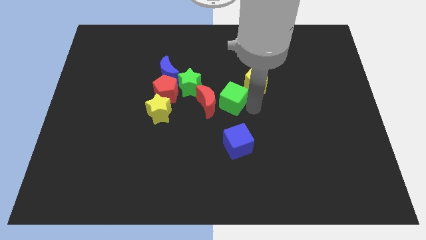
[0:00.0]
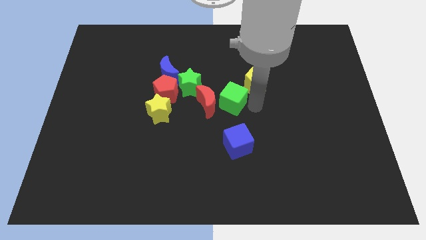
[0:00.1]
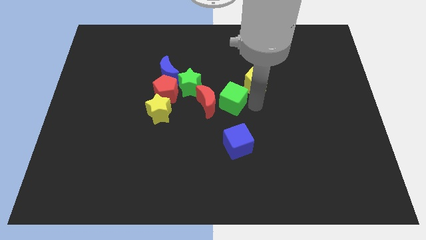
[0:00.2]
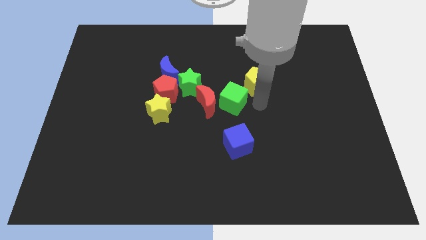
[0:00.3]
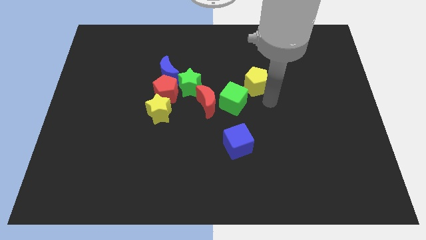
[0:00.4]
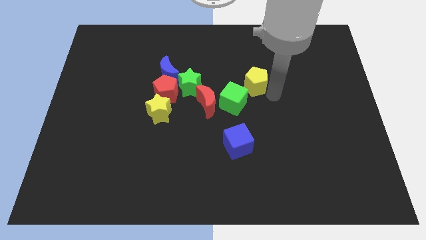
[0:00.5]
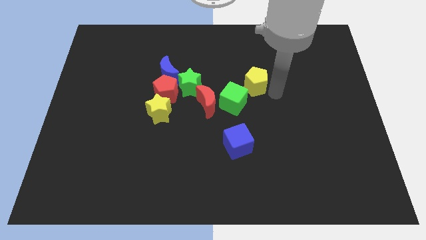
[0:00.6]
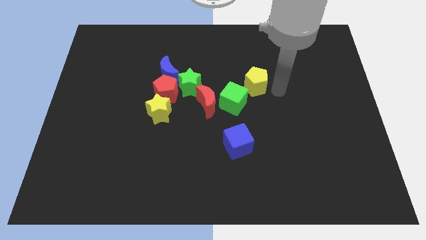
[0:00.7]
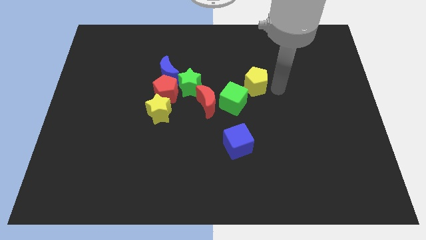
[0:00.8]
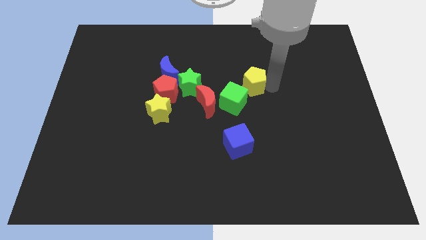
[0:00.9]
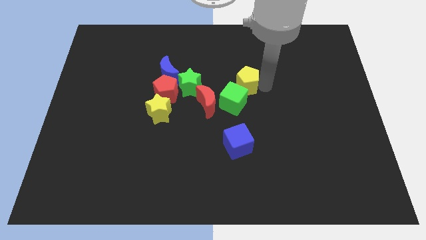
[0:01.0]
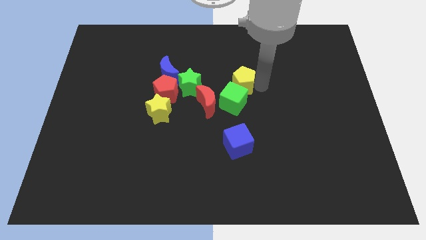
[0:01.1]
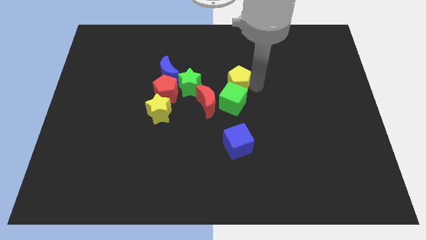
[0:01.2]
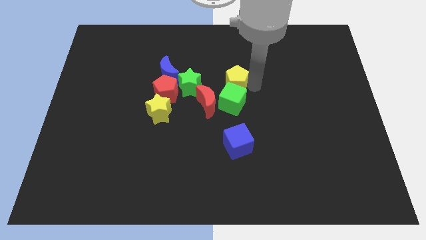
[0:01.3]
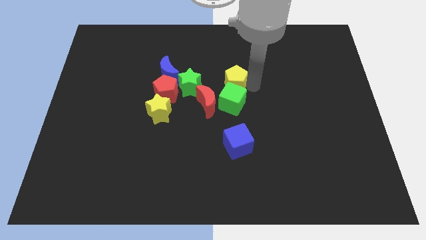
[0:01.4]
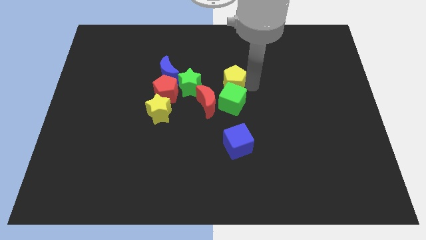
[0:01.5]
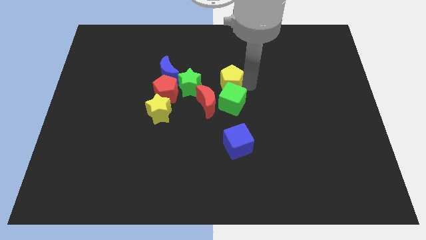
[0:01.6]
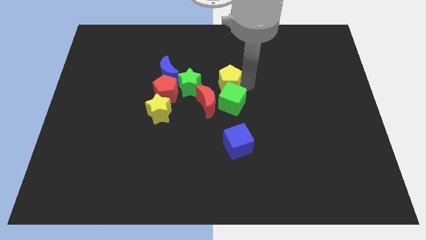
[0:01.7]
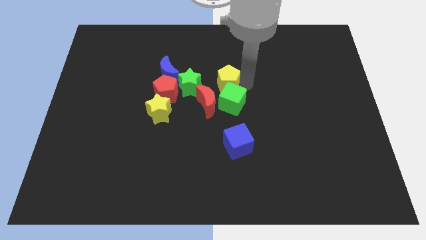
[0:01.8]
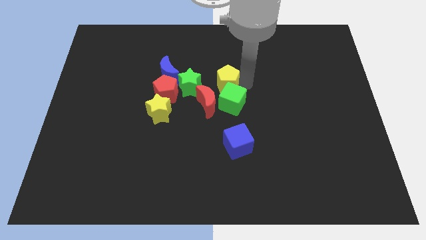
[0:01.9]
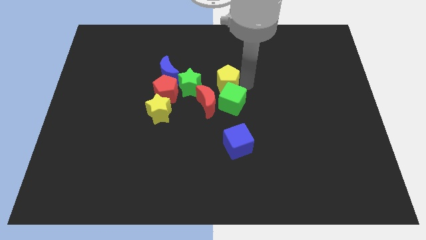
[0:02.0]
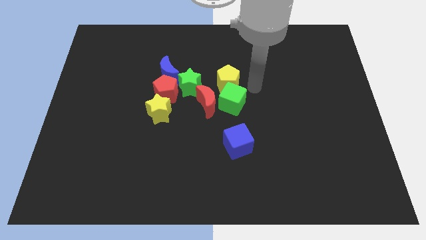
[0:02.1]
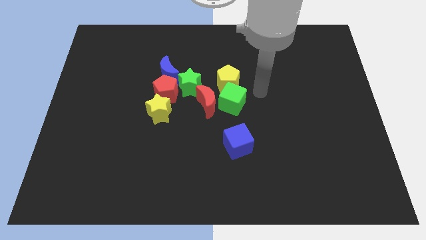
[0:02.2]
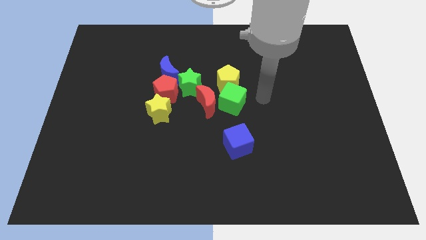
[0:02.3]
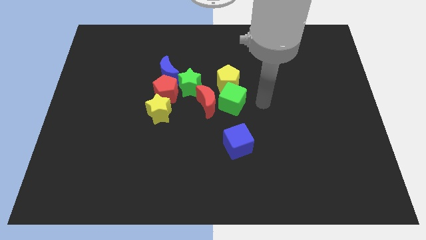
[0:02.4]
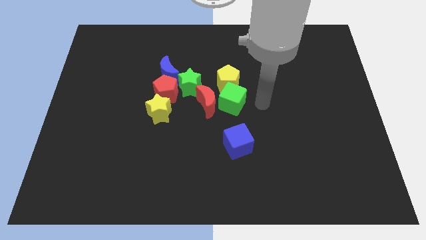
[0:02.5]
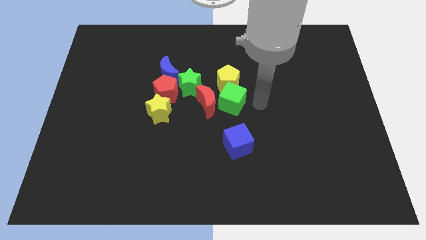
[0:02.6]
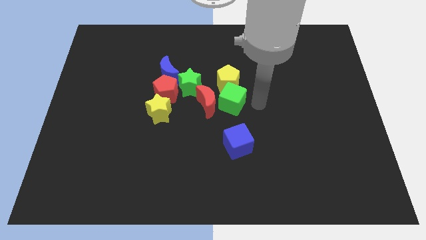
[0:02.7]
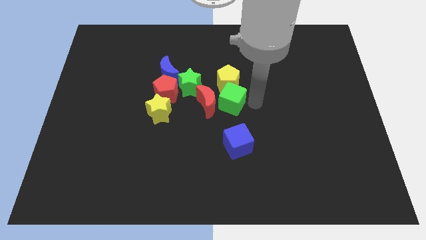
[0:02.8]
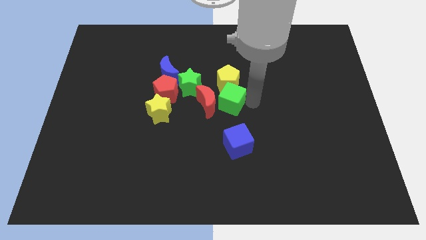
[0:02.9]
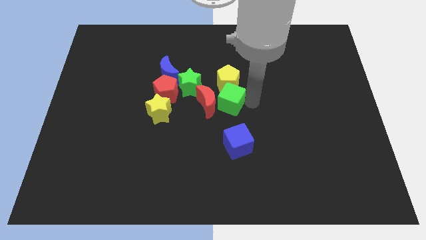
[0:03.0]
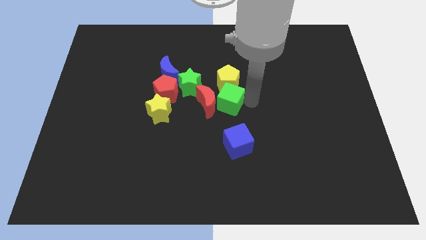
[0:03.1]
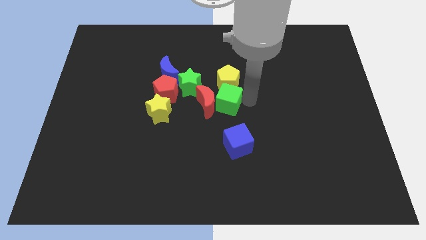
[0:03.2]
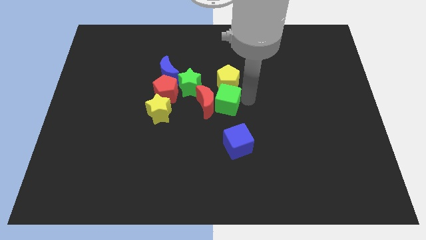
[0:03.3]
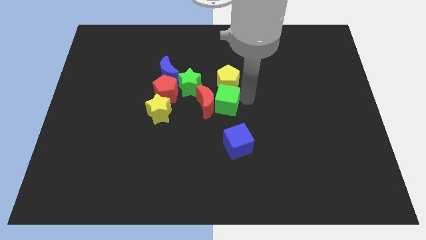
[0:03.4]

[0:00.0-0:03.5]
move the yellow pentagon to the top of the green cube

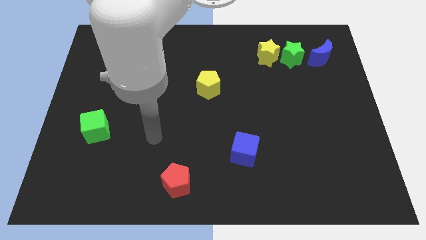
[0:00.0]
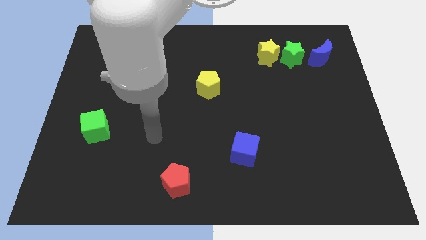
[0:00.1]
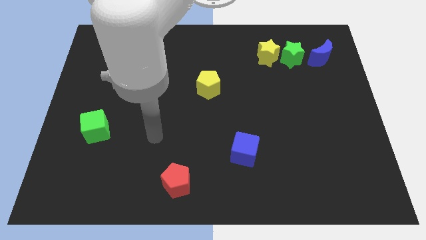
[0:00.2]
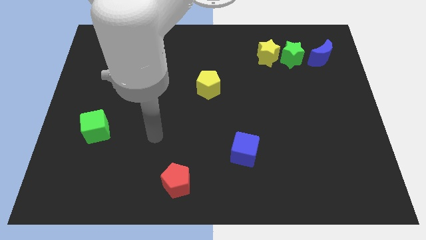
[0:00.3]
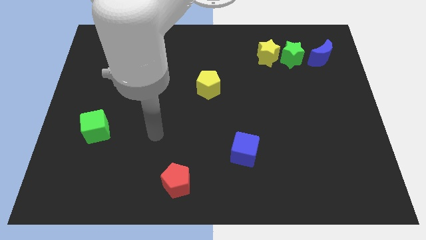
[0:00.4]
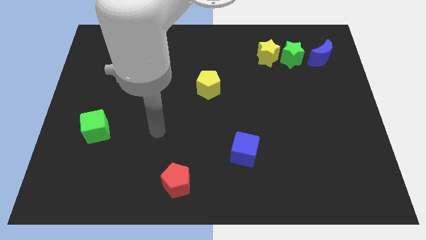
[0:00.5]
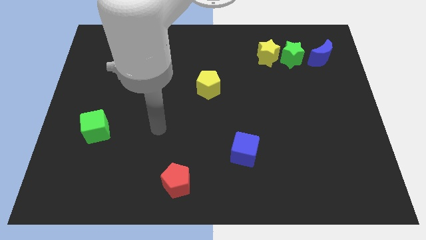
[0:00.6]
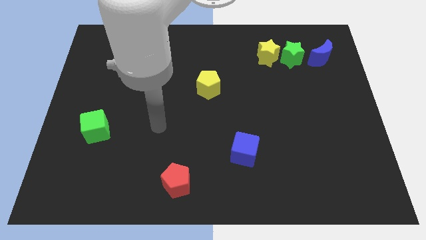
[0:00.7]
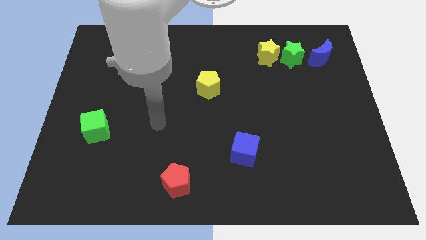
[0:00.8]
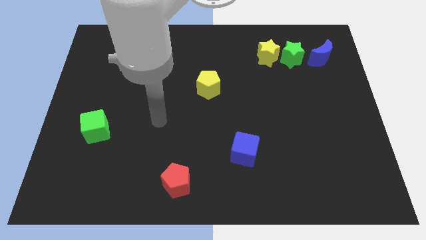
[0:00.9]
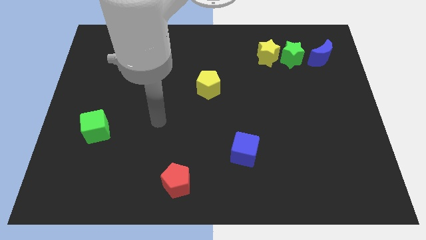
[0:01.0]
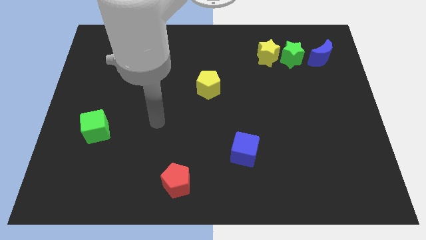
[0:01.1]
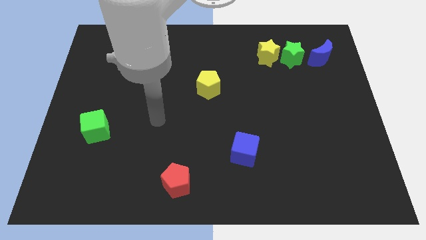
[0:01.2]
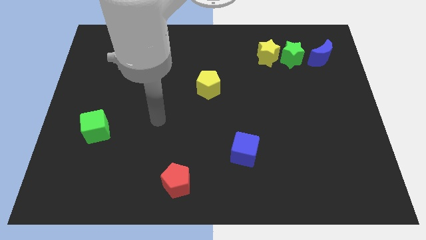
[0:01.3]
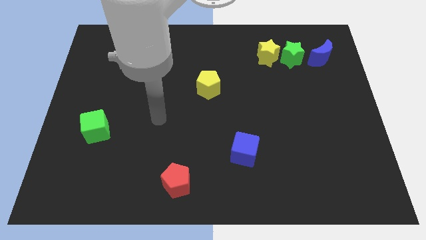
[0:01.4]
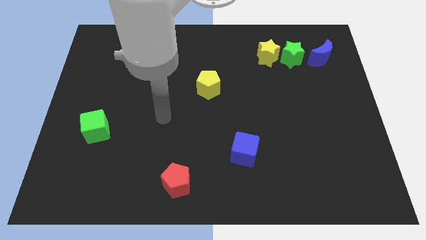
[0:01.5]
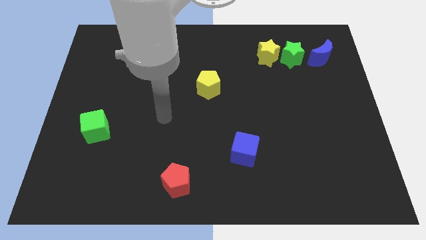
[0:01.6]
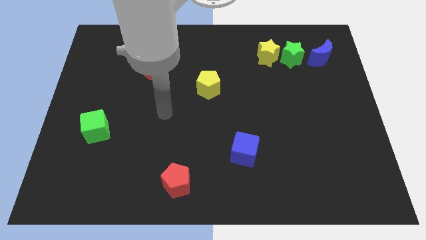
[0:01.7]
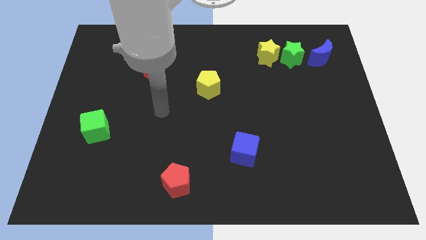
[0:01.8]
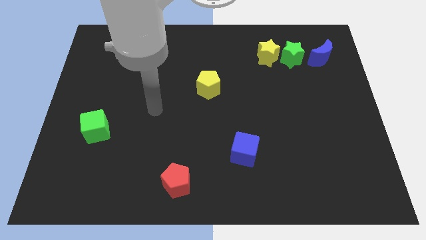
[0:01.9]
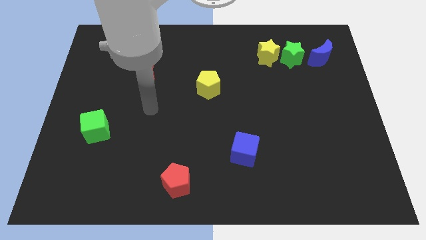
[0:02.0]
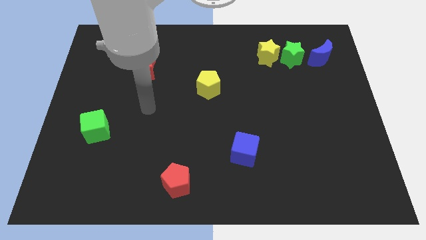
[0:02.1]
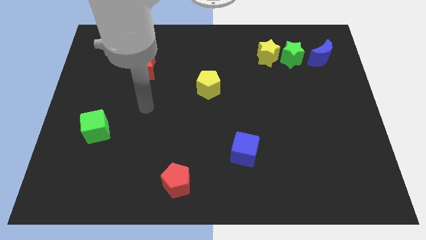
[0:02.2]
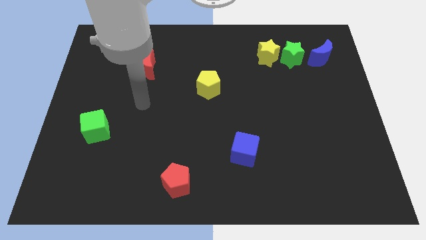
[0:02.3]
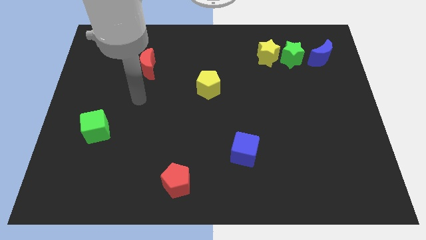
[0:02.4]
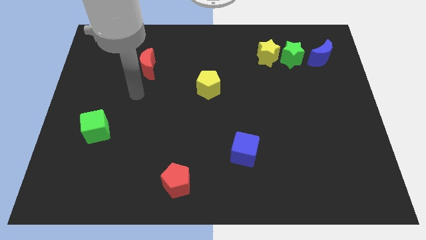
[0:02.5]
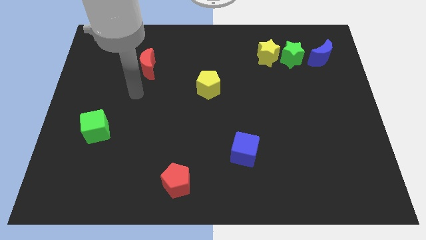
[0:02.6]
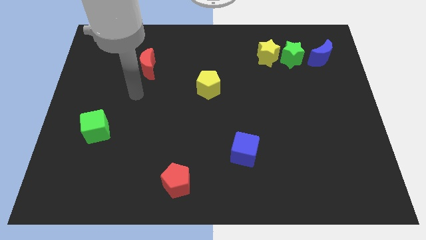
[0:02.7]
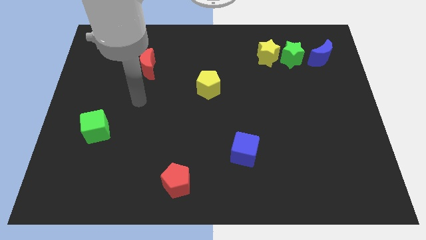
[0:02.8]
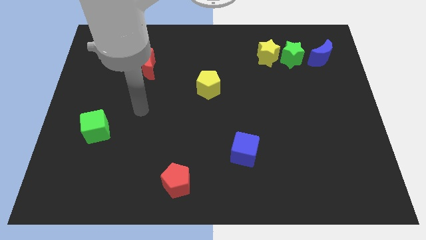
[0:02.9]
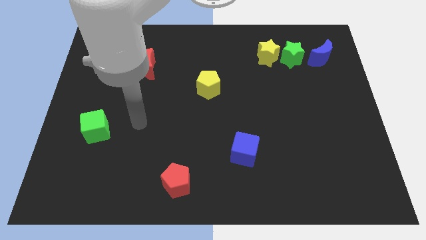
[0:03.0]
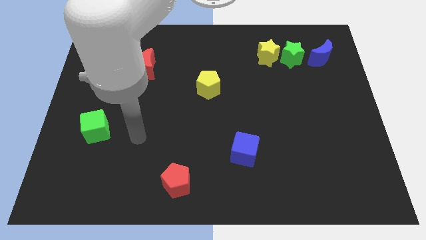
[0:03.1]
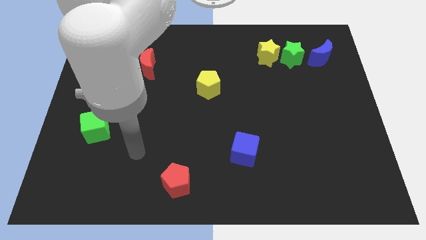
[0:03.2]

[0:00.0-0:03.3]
place your hand in between the green cube and red pentagon

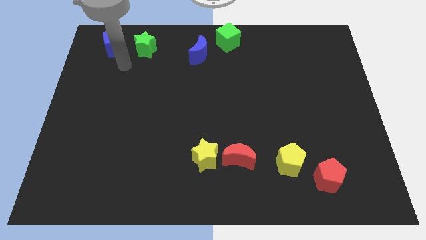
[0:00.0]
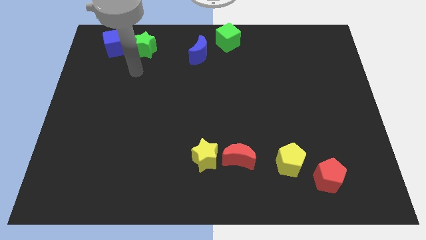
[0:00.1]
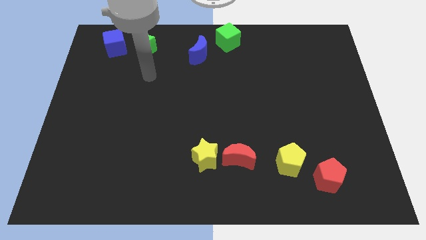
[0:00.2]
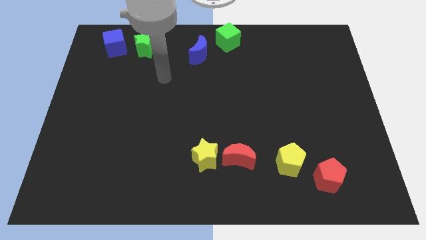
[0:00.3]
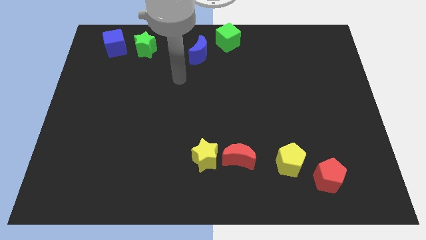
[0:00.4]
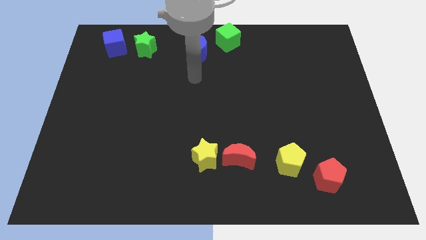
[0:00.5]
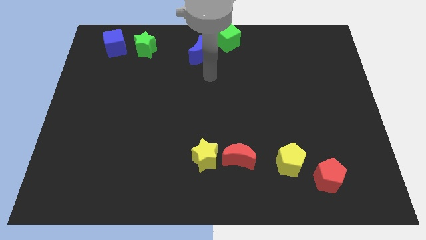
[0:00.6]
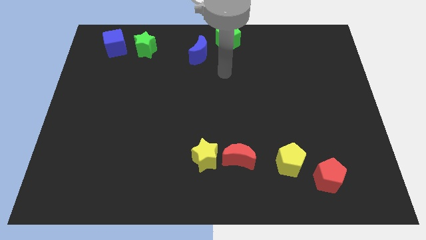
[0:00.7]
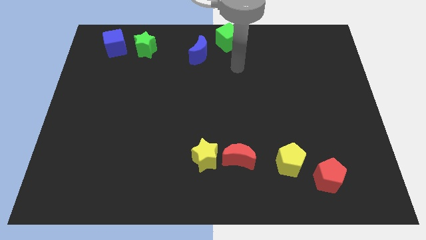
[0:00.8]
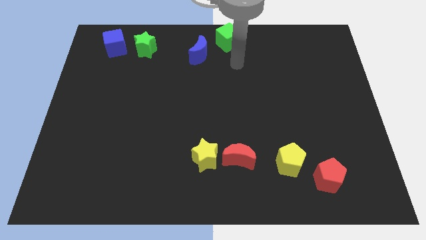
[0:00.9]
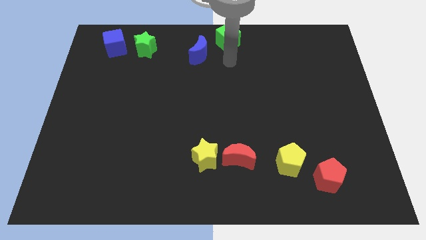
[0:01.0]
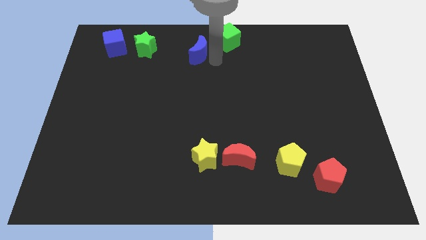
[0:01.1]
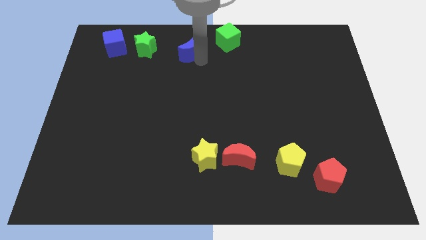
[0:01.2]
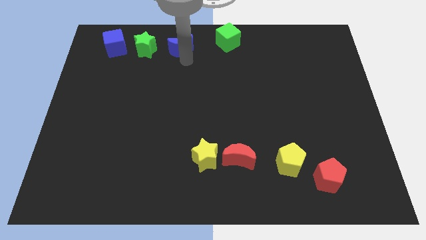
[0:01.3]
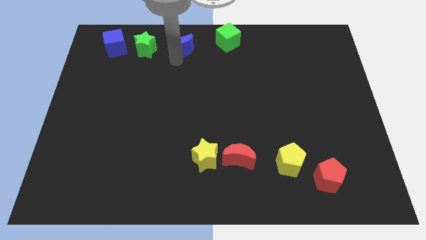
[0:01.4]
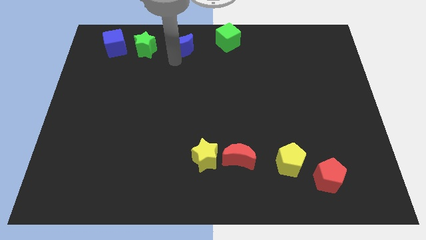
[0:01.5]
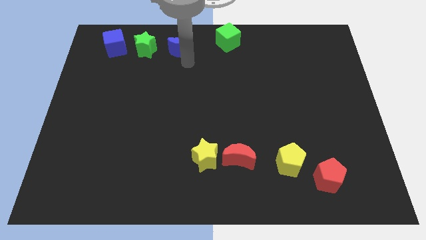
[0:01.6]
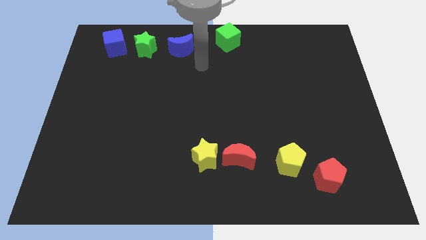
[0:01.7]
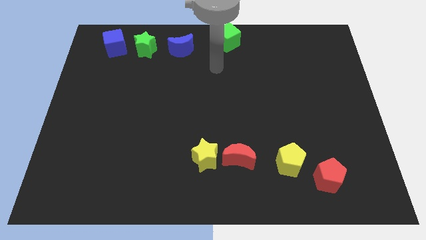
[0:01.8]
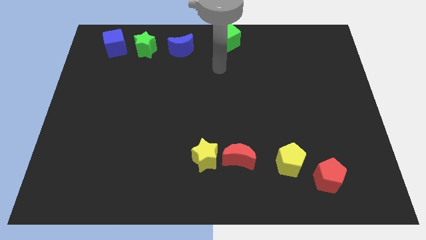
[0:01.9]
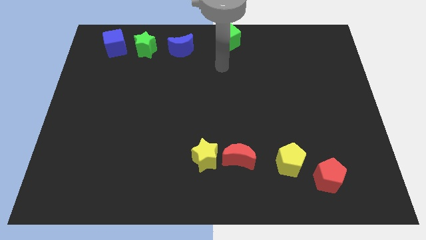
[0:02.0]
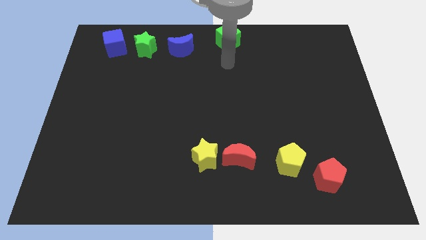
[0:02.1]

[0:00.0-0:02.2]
move your arm into the blue moon
